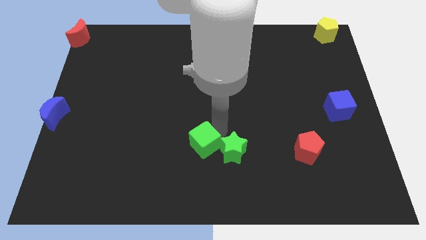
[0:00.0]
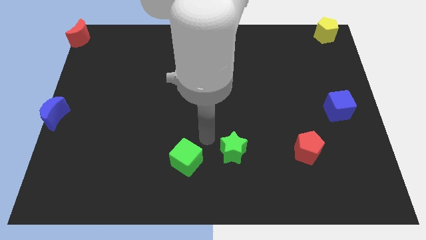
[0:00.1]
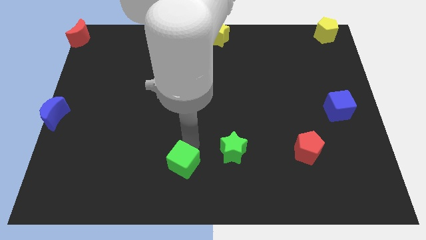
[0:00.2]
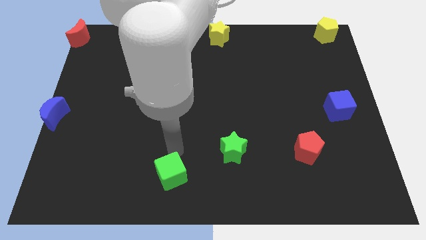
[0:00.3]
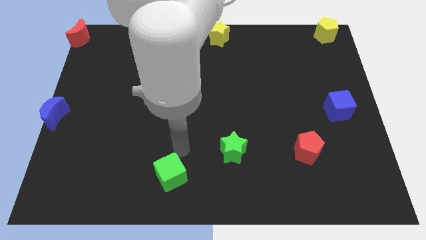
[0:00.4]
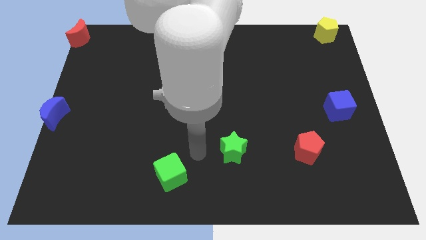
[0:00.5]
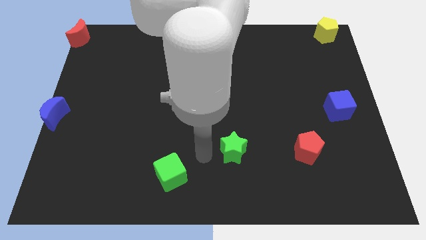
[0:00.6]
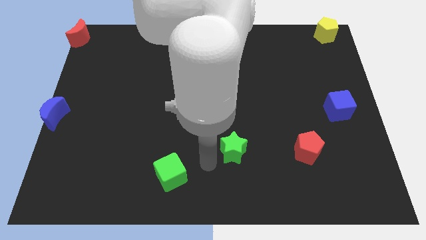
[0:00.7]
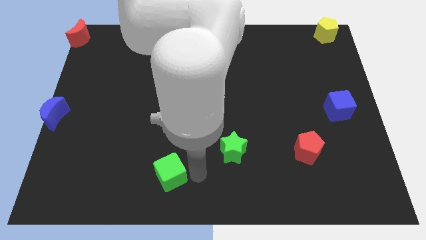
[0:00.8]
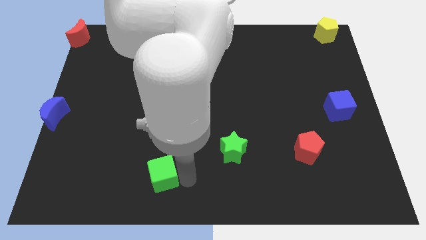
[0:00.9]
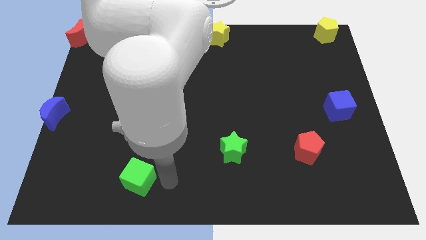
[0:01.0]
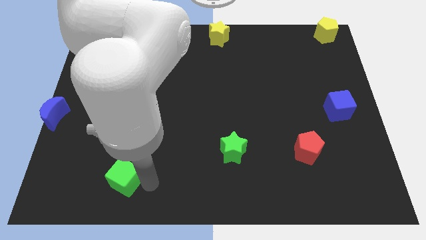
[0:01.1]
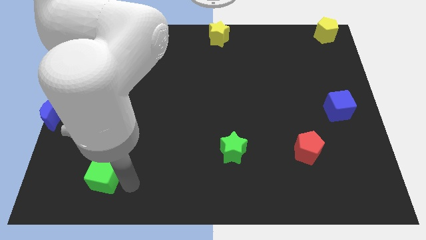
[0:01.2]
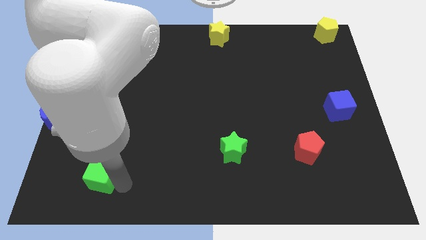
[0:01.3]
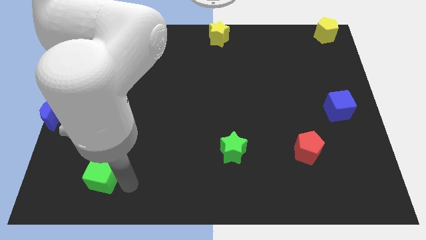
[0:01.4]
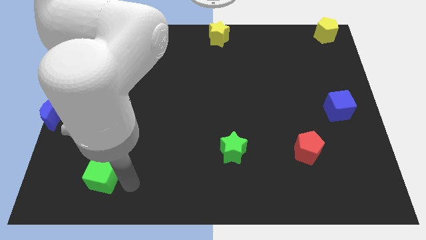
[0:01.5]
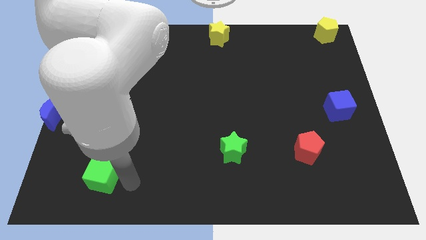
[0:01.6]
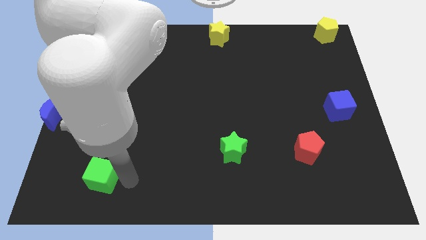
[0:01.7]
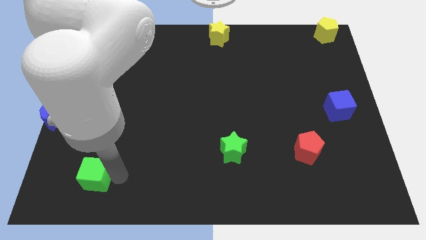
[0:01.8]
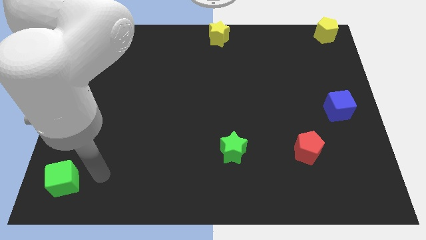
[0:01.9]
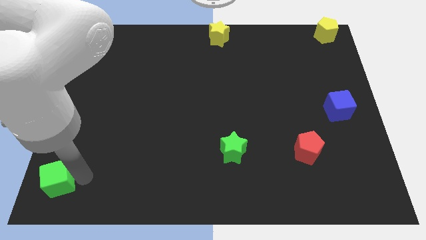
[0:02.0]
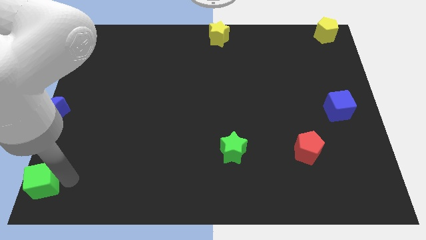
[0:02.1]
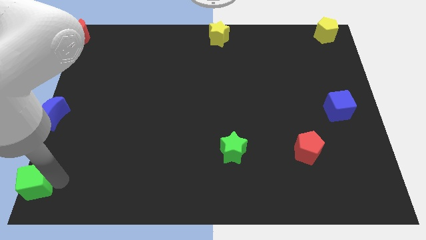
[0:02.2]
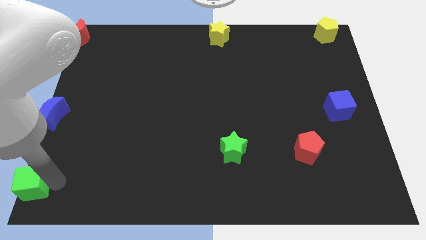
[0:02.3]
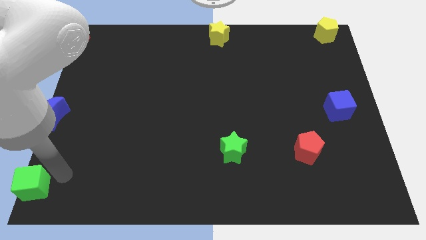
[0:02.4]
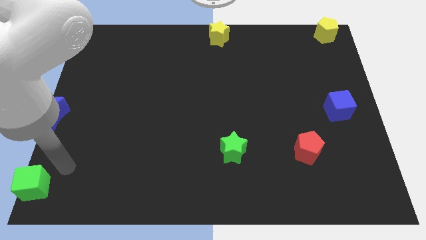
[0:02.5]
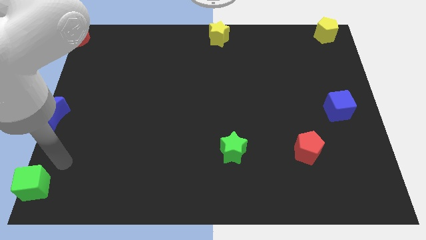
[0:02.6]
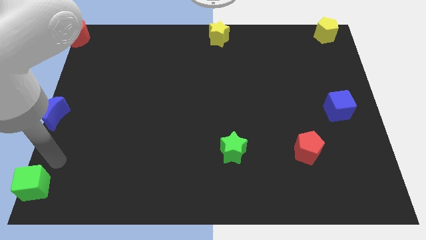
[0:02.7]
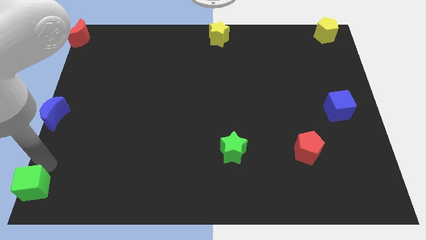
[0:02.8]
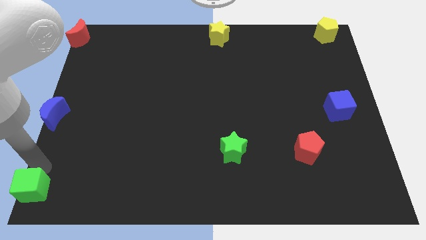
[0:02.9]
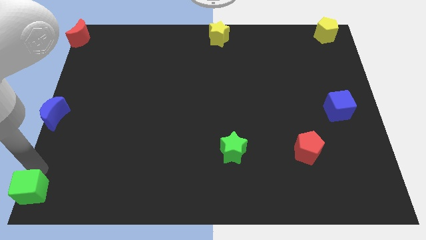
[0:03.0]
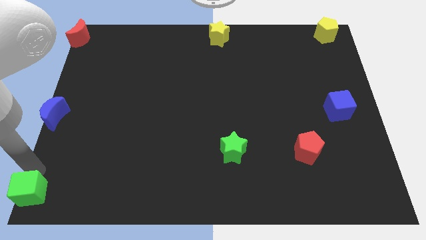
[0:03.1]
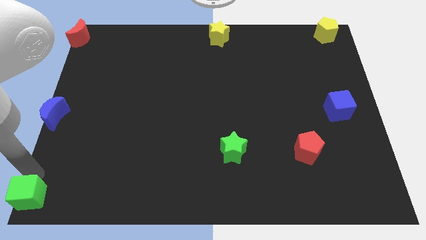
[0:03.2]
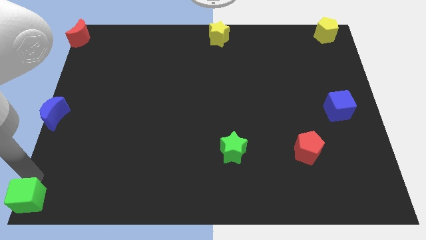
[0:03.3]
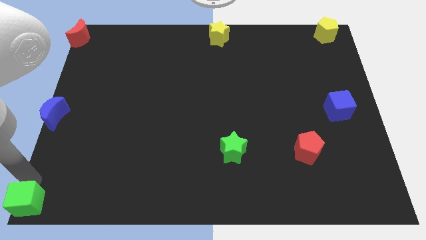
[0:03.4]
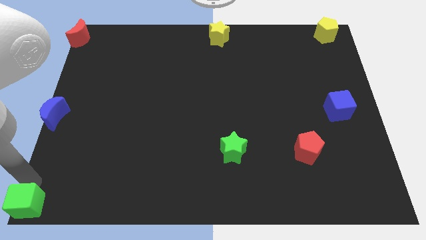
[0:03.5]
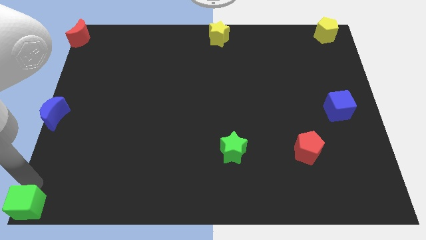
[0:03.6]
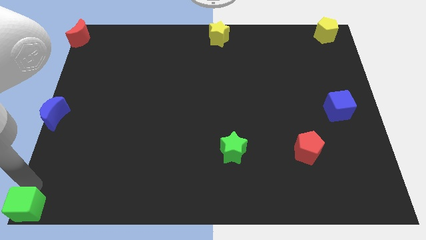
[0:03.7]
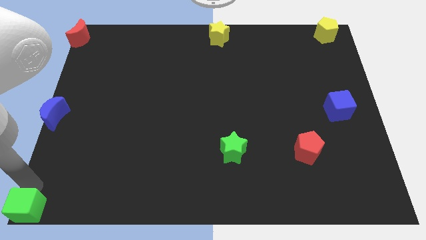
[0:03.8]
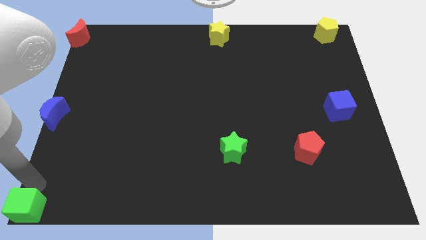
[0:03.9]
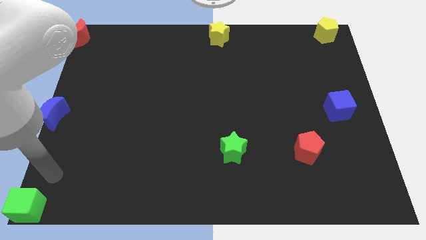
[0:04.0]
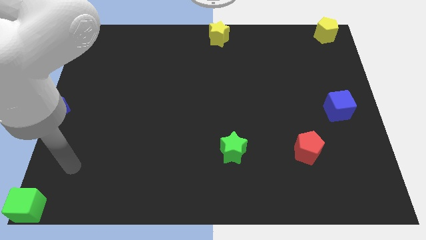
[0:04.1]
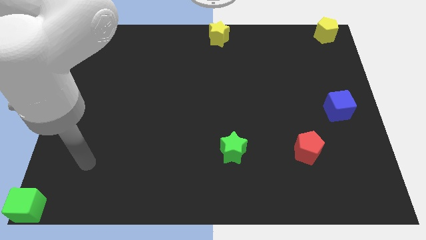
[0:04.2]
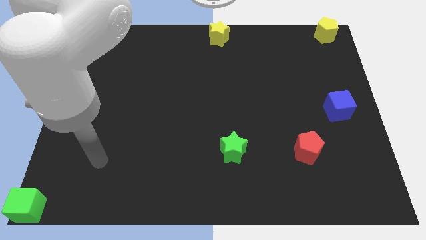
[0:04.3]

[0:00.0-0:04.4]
move the green cube to the bottom left to the board

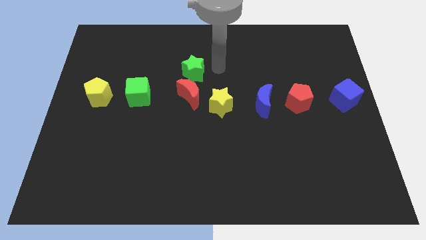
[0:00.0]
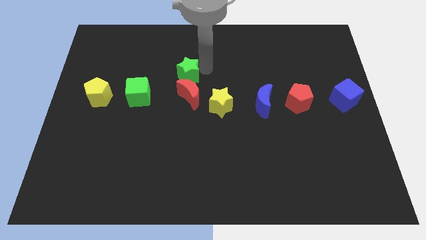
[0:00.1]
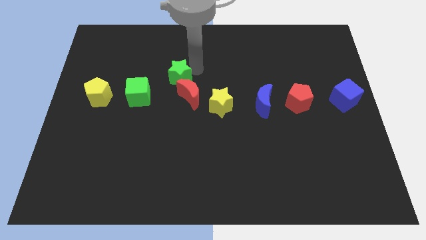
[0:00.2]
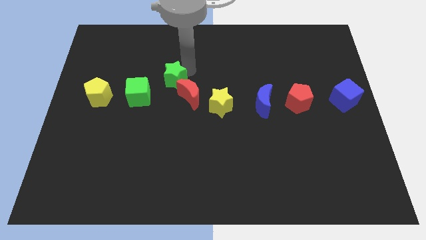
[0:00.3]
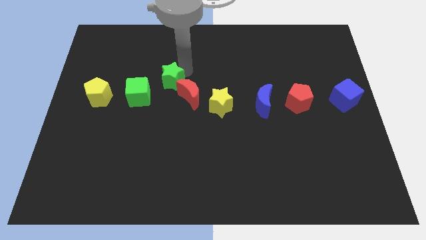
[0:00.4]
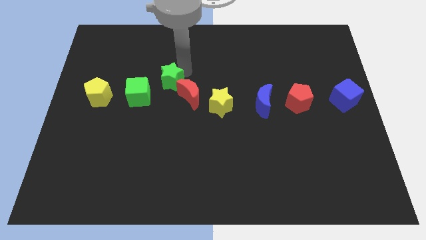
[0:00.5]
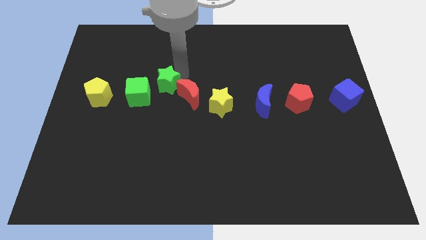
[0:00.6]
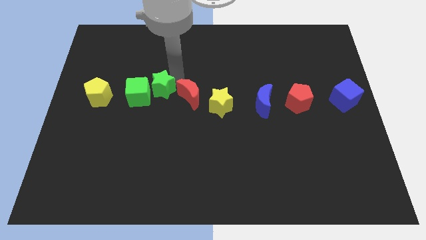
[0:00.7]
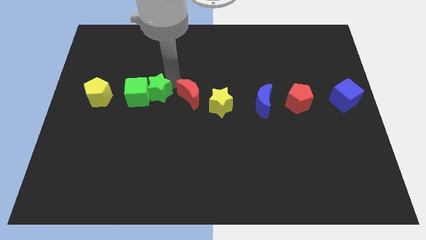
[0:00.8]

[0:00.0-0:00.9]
place green star between green cube and red half moon

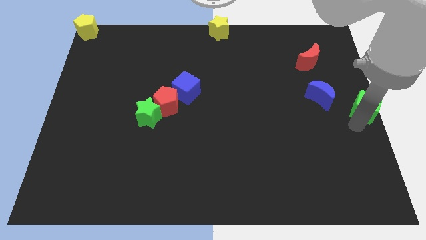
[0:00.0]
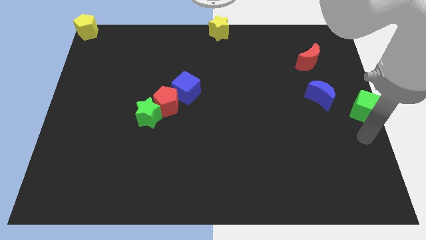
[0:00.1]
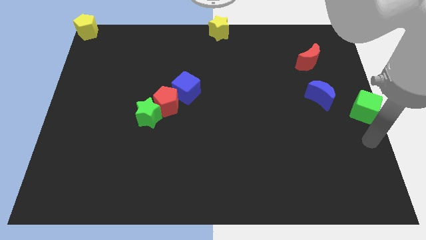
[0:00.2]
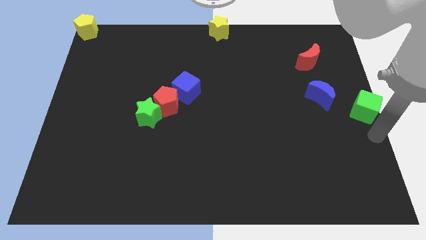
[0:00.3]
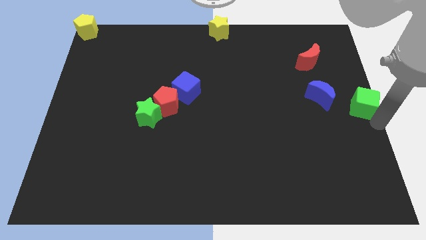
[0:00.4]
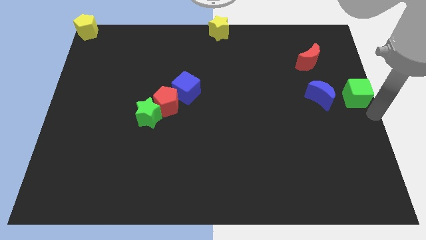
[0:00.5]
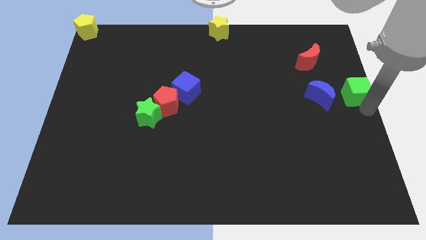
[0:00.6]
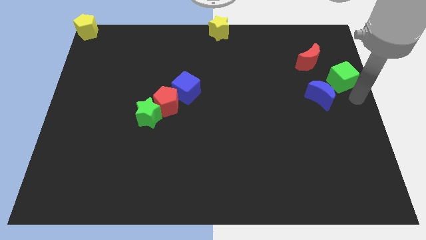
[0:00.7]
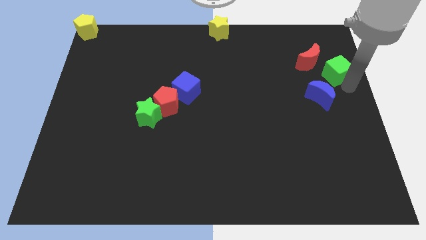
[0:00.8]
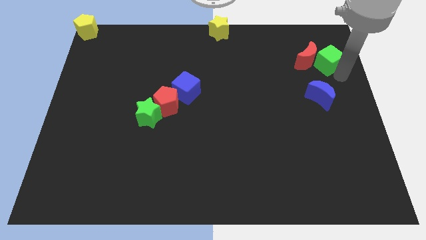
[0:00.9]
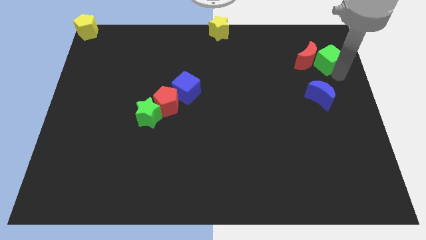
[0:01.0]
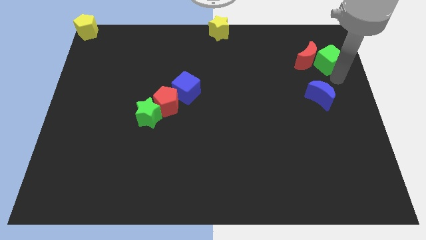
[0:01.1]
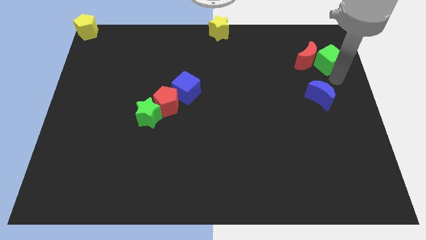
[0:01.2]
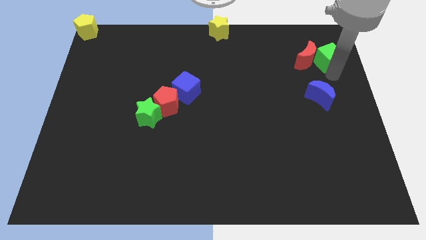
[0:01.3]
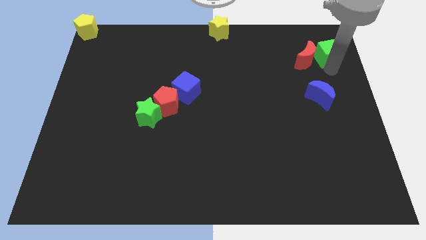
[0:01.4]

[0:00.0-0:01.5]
place green cube adjacent to red crescent

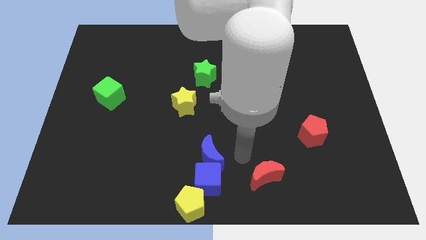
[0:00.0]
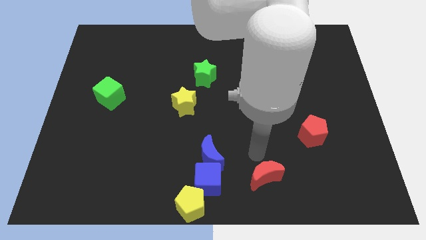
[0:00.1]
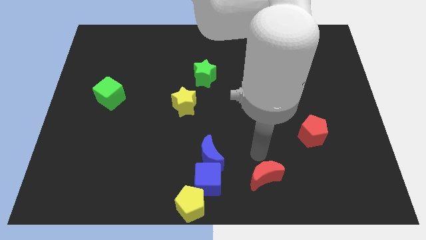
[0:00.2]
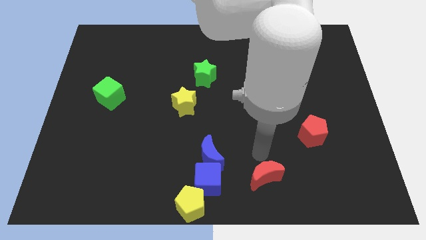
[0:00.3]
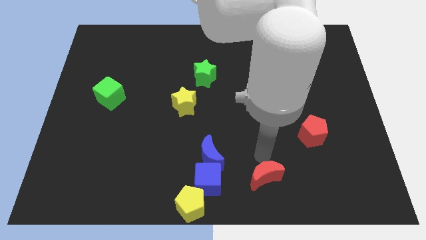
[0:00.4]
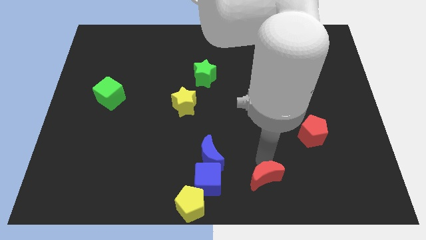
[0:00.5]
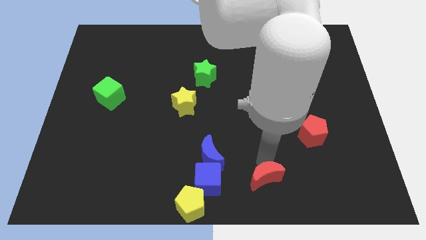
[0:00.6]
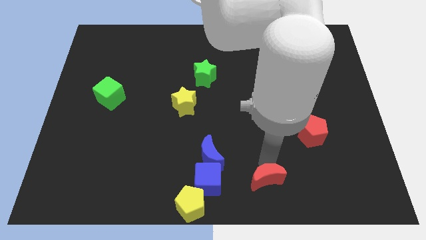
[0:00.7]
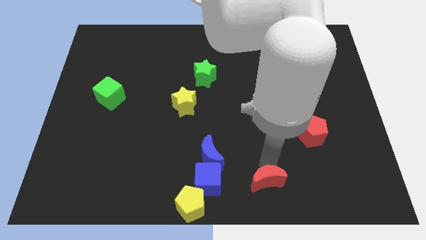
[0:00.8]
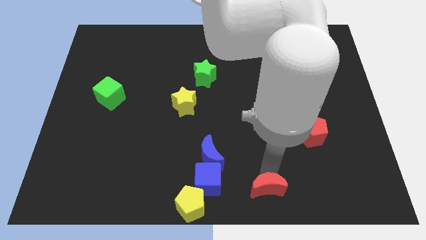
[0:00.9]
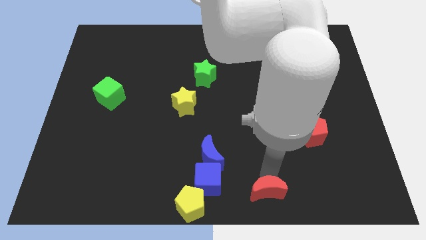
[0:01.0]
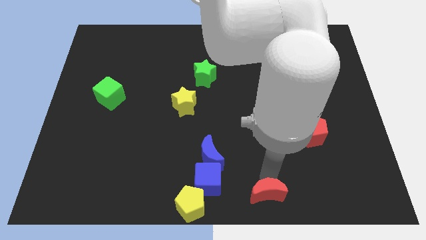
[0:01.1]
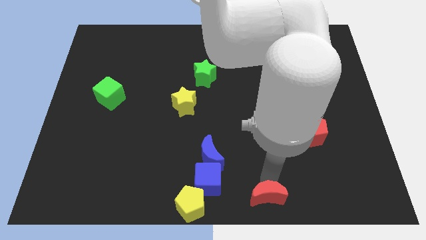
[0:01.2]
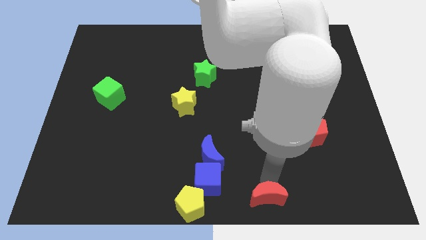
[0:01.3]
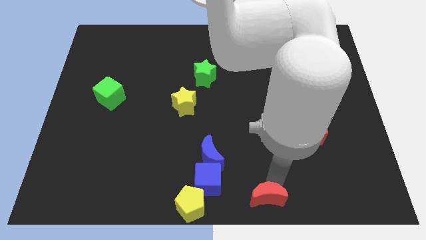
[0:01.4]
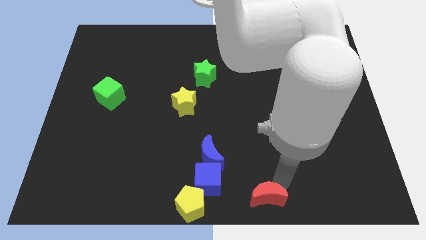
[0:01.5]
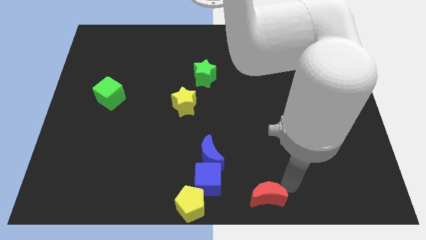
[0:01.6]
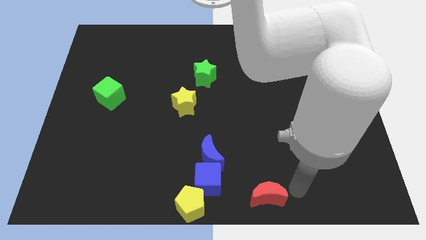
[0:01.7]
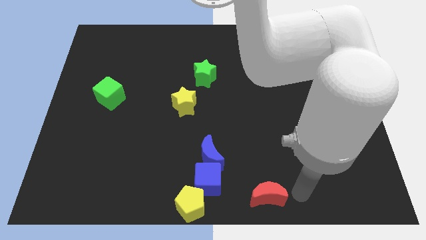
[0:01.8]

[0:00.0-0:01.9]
drag the red crescent slightly to the bottom side of the board

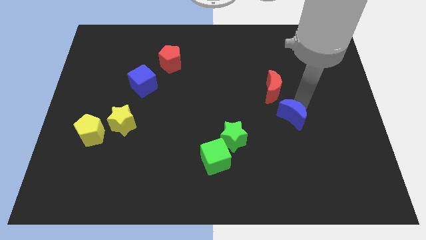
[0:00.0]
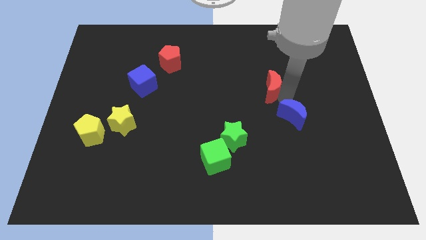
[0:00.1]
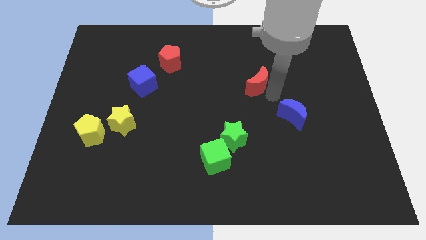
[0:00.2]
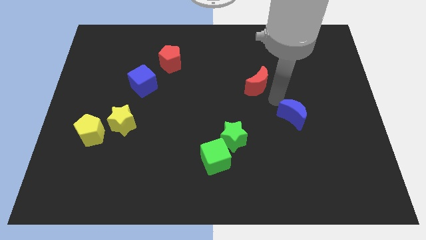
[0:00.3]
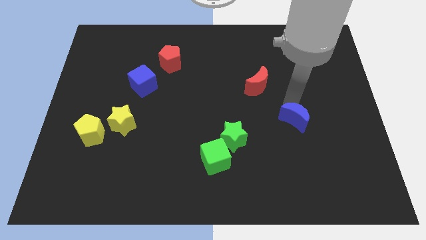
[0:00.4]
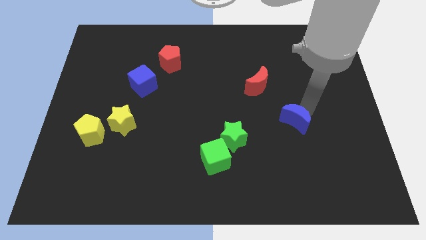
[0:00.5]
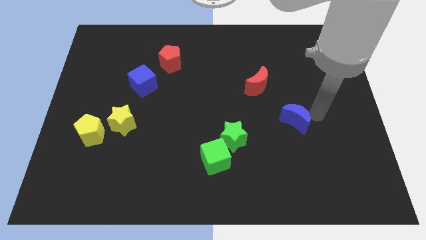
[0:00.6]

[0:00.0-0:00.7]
slightly touch the red moon to the right
